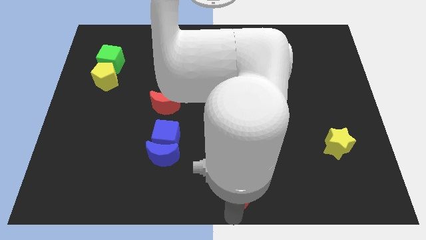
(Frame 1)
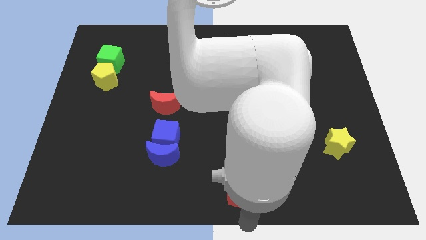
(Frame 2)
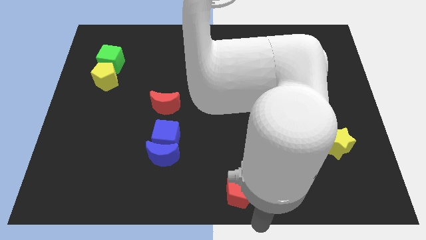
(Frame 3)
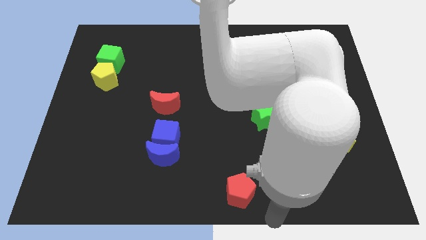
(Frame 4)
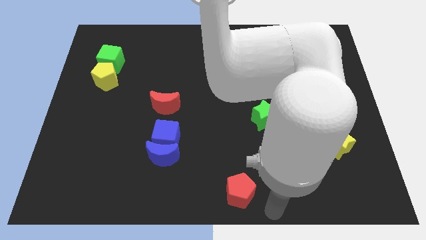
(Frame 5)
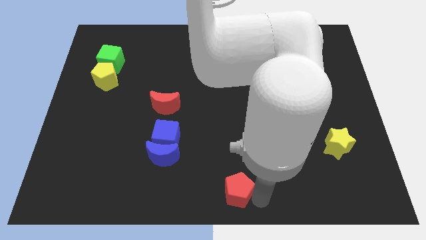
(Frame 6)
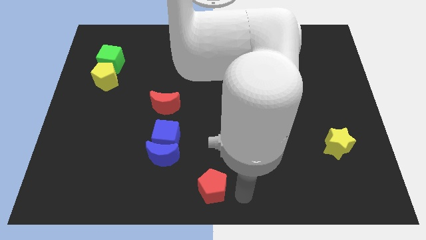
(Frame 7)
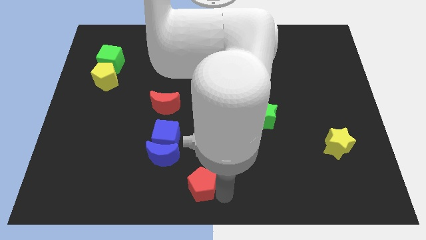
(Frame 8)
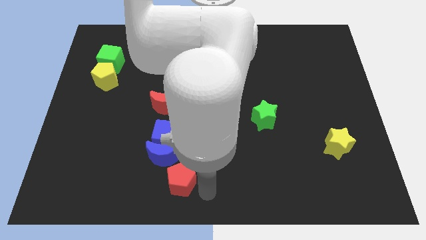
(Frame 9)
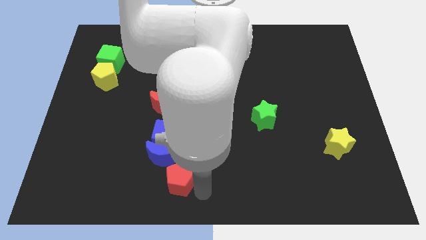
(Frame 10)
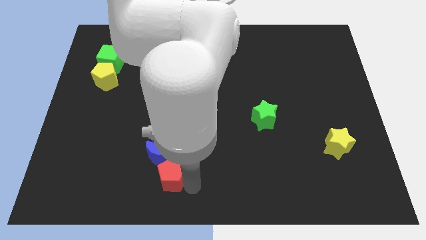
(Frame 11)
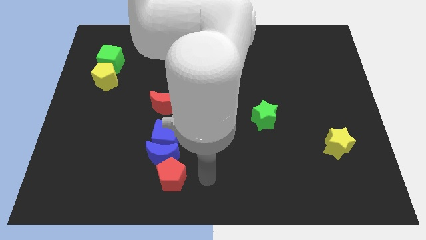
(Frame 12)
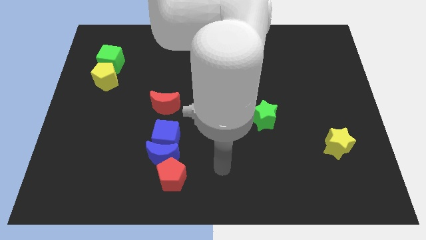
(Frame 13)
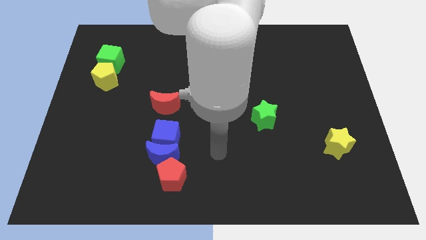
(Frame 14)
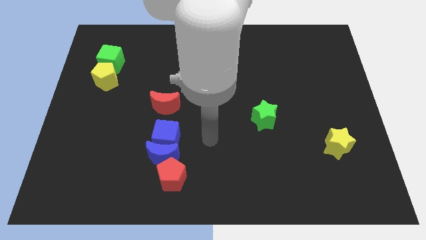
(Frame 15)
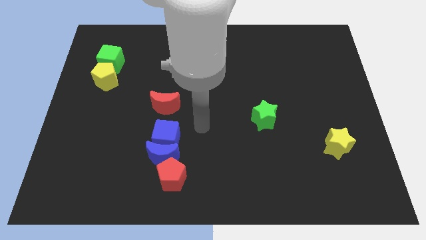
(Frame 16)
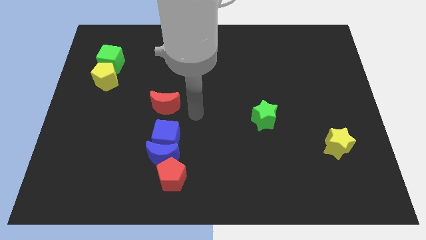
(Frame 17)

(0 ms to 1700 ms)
place the red pentagon vertically below the blue crescent

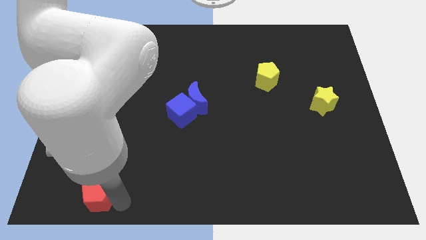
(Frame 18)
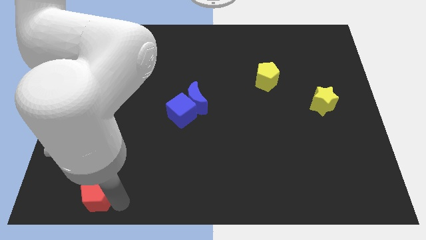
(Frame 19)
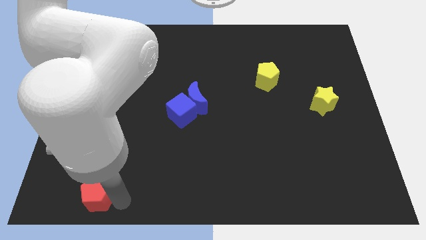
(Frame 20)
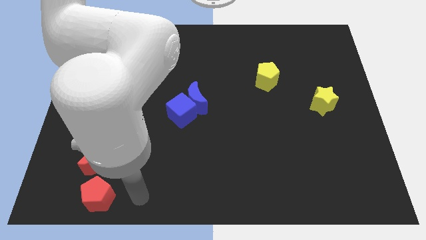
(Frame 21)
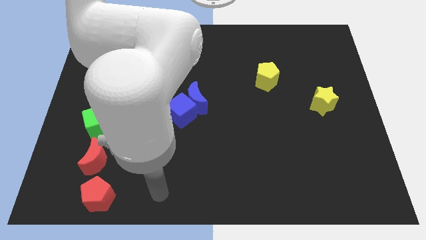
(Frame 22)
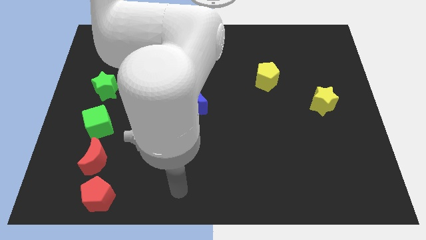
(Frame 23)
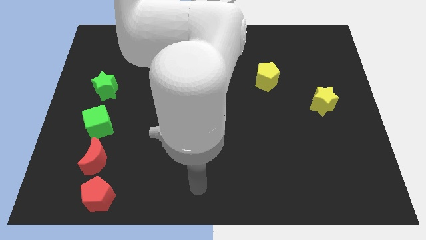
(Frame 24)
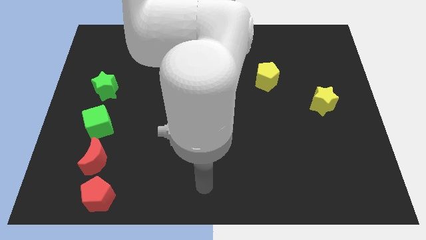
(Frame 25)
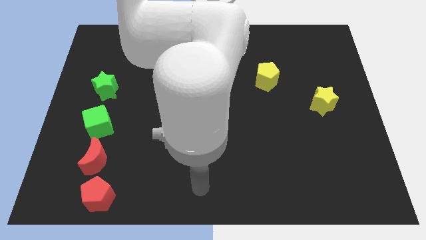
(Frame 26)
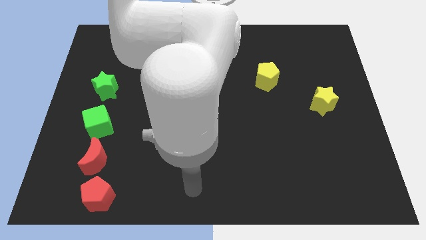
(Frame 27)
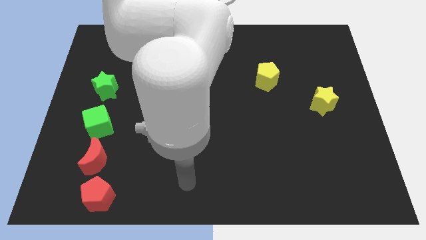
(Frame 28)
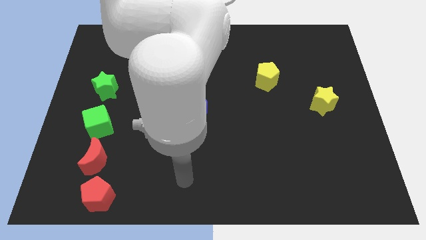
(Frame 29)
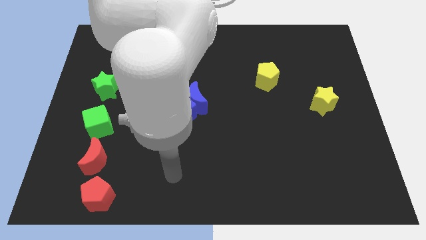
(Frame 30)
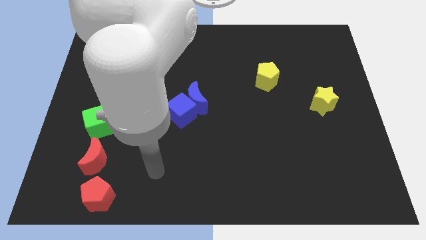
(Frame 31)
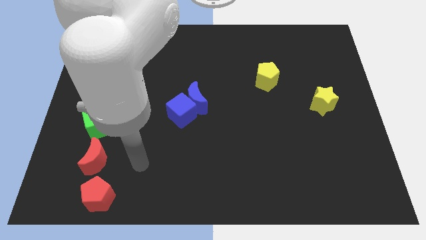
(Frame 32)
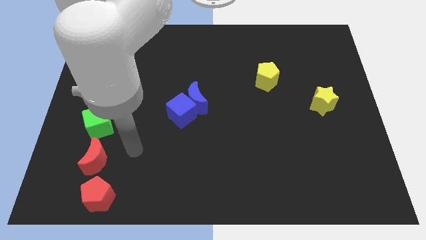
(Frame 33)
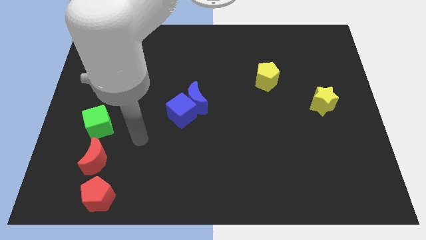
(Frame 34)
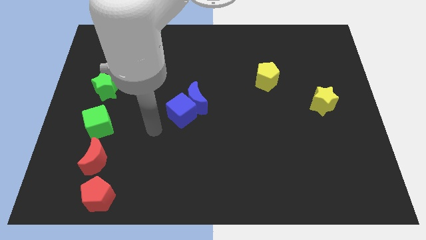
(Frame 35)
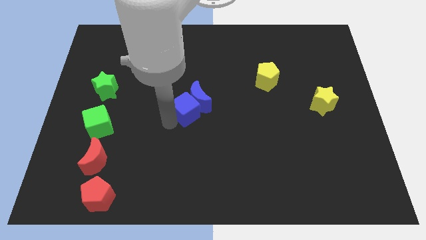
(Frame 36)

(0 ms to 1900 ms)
move your arm away from the red pentagon

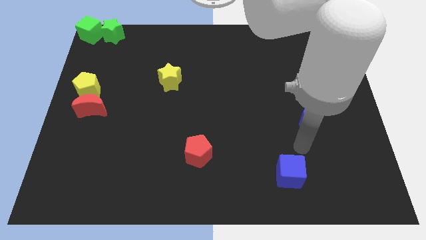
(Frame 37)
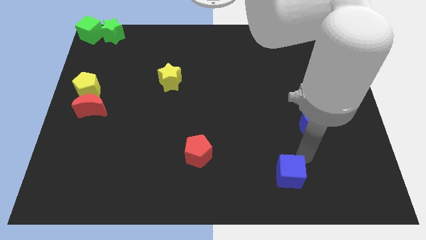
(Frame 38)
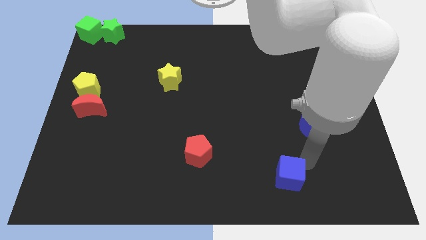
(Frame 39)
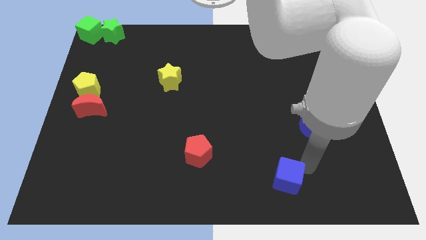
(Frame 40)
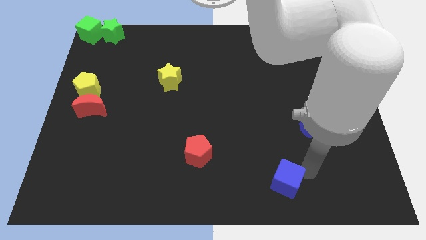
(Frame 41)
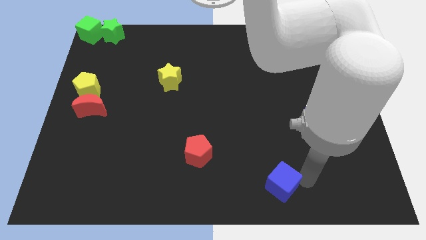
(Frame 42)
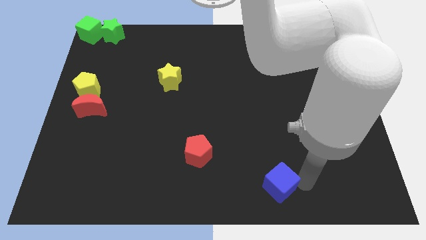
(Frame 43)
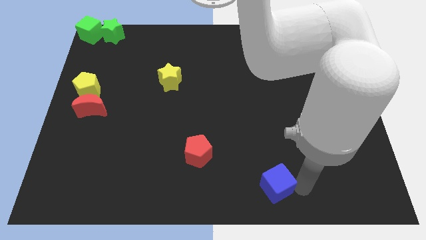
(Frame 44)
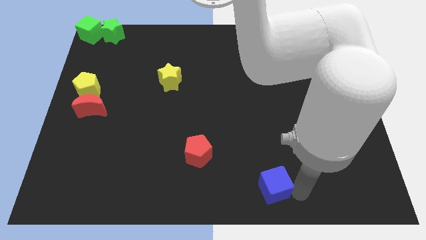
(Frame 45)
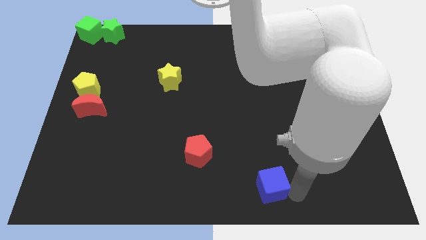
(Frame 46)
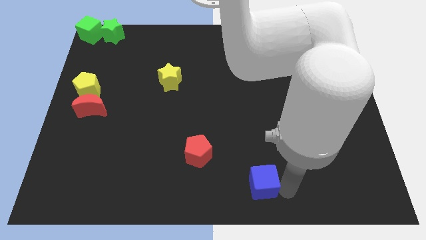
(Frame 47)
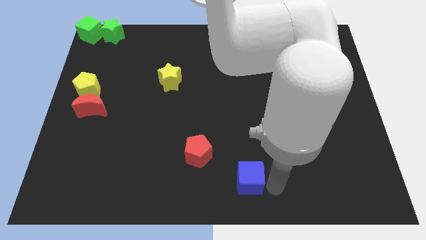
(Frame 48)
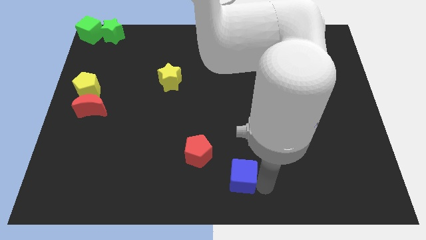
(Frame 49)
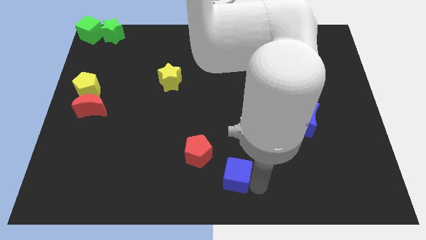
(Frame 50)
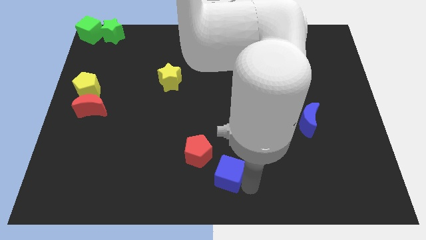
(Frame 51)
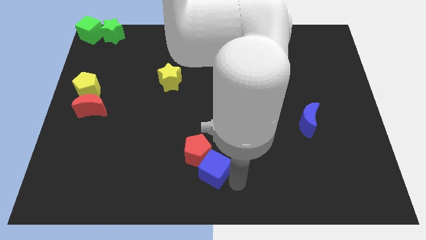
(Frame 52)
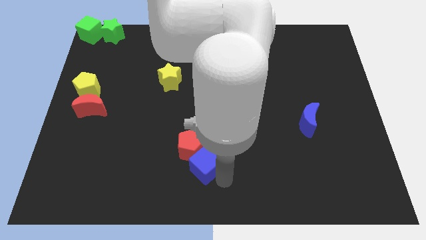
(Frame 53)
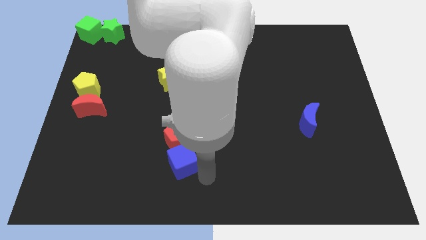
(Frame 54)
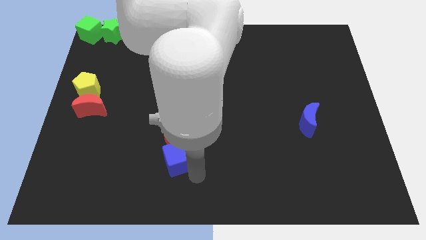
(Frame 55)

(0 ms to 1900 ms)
put the blue cube and red pentagon together

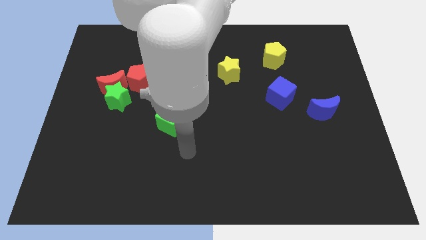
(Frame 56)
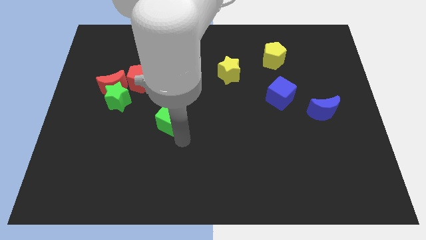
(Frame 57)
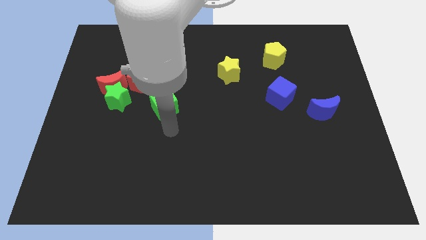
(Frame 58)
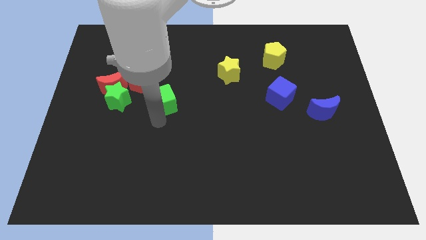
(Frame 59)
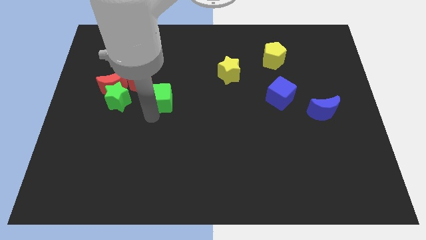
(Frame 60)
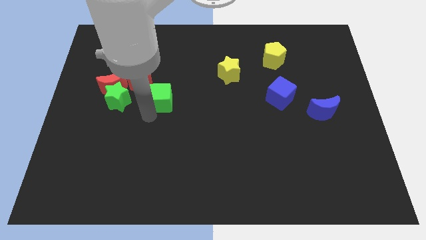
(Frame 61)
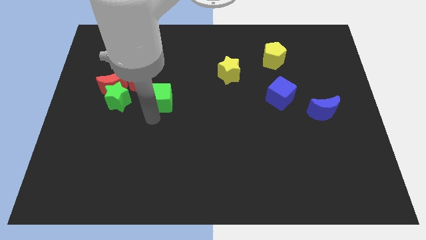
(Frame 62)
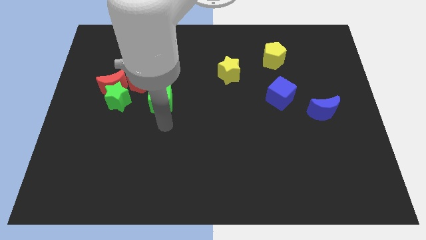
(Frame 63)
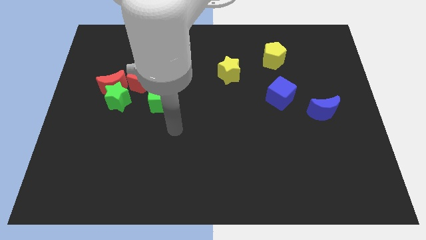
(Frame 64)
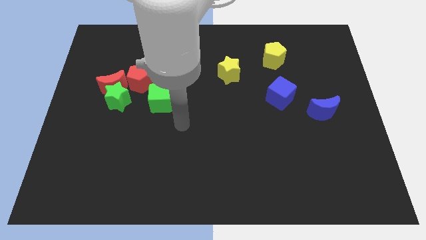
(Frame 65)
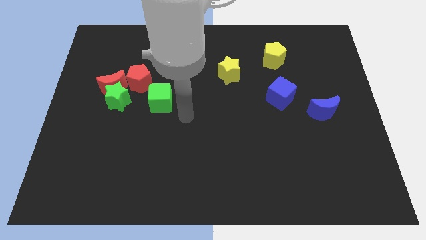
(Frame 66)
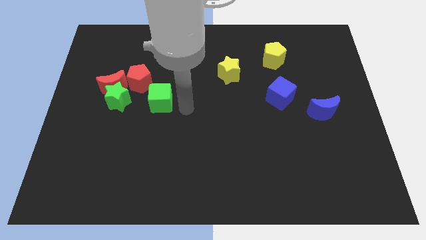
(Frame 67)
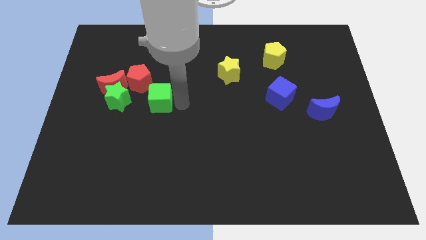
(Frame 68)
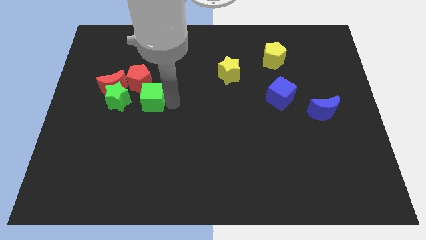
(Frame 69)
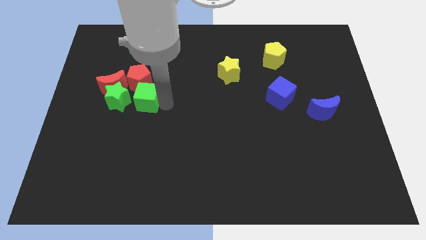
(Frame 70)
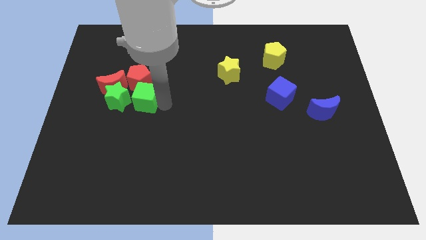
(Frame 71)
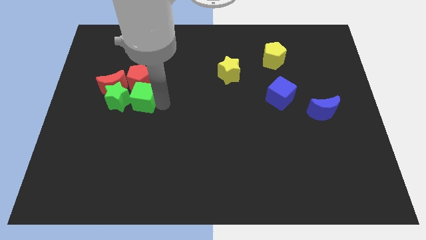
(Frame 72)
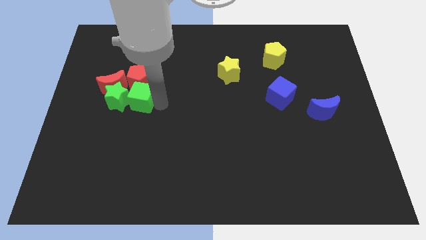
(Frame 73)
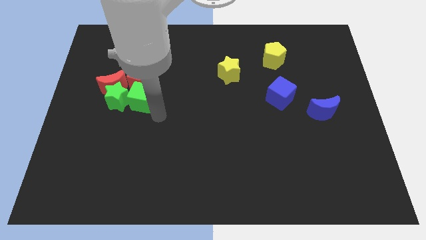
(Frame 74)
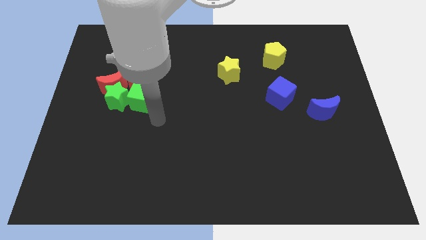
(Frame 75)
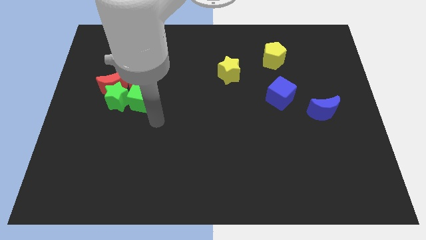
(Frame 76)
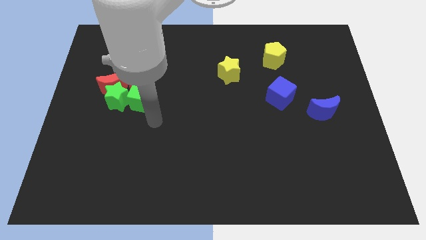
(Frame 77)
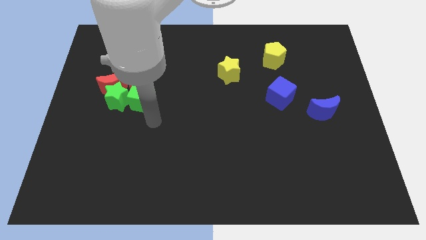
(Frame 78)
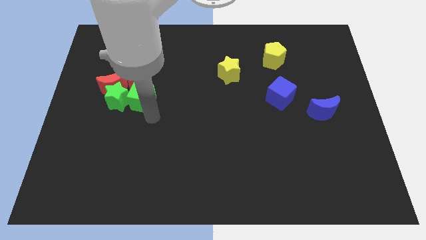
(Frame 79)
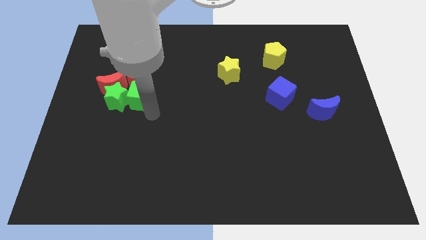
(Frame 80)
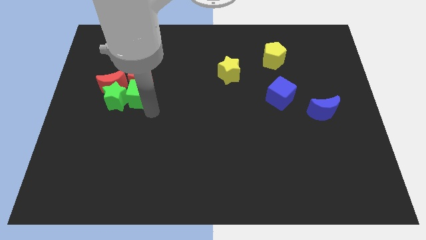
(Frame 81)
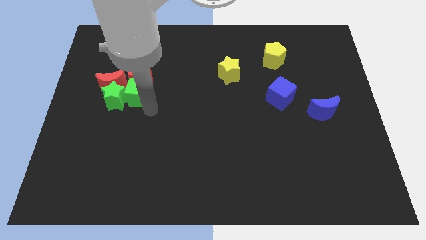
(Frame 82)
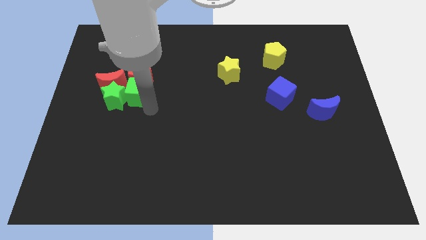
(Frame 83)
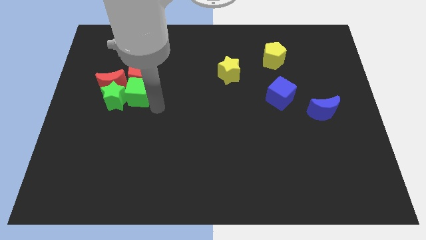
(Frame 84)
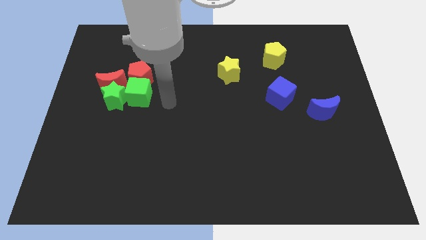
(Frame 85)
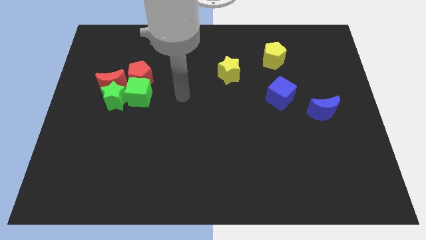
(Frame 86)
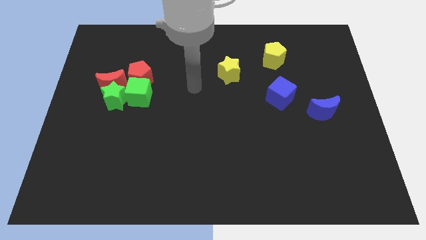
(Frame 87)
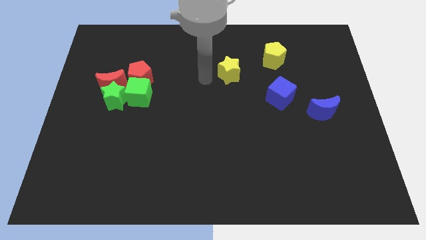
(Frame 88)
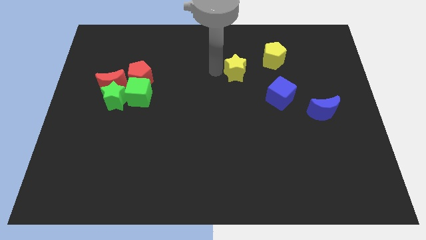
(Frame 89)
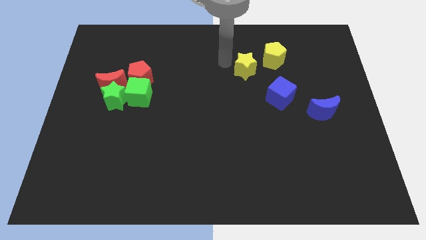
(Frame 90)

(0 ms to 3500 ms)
move green cube slightly towards red pentagon
